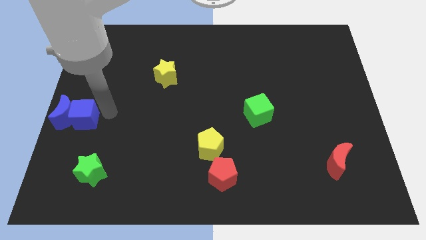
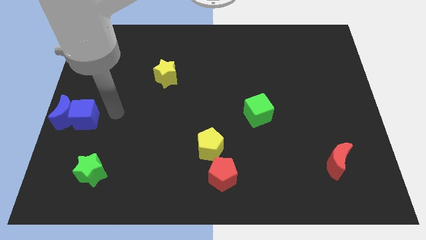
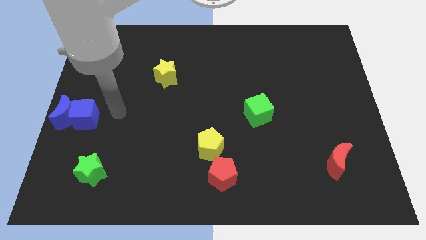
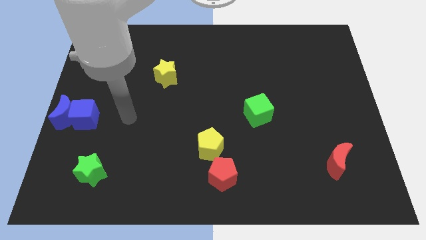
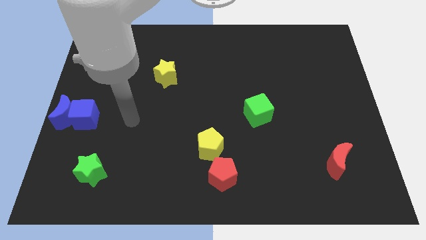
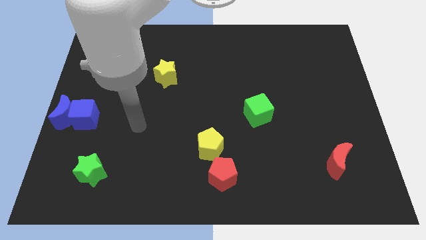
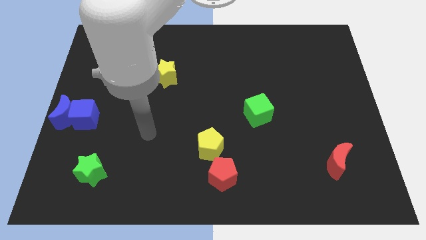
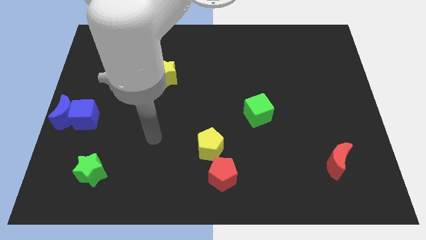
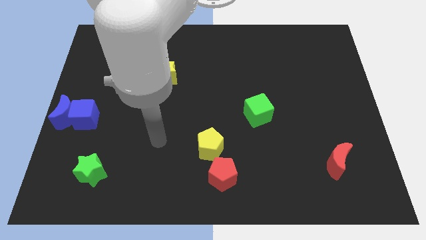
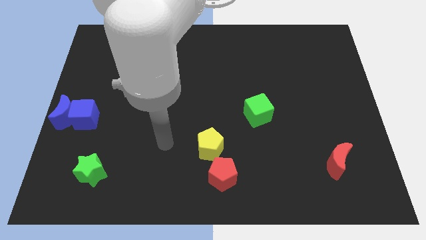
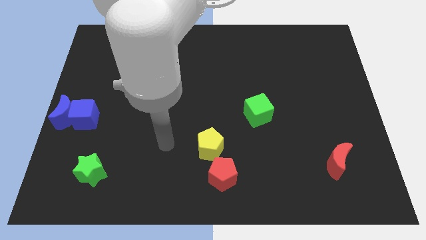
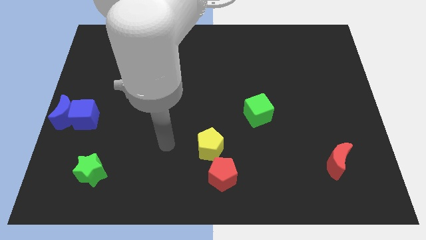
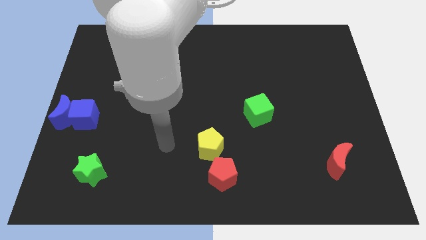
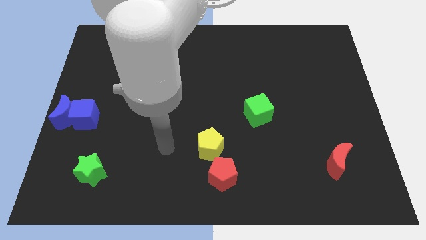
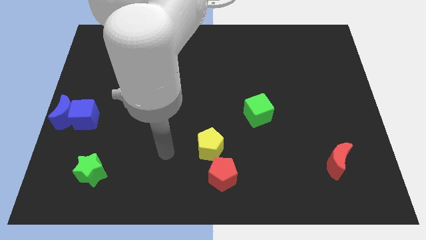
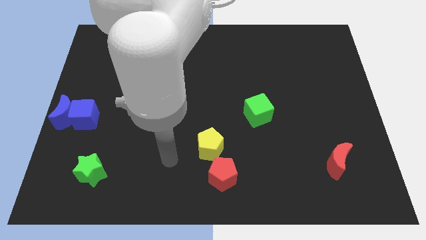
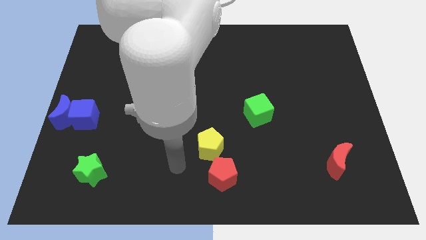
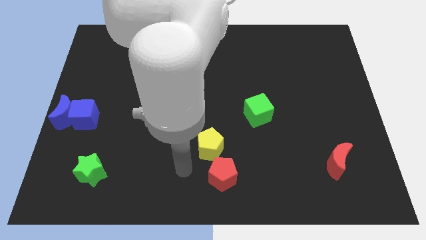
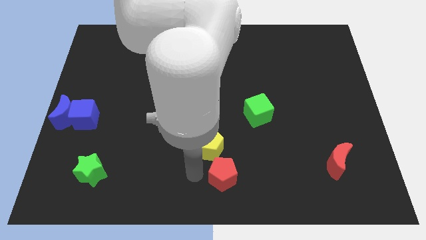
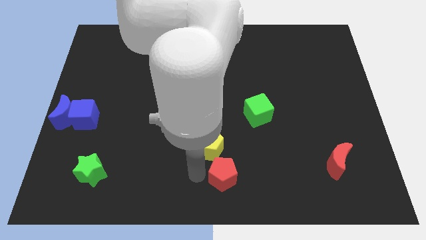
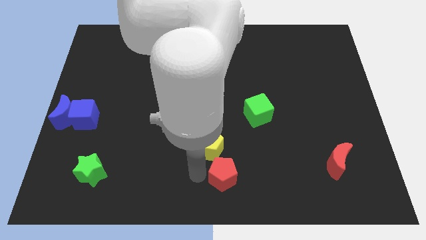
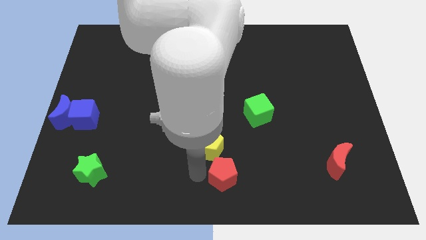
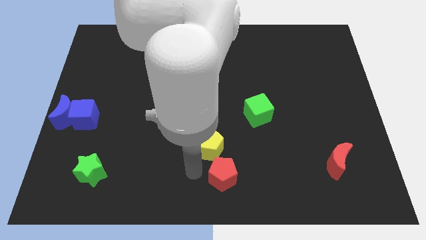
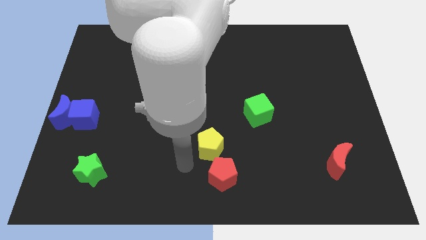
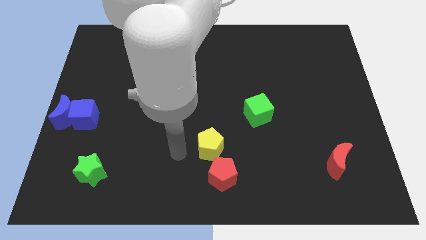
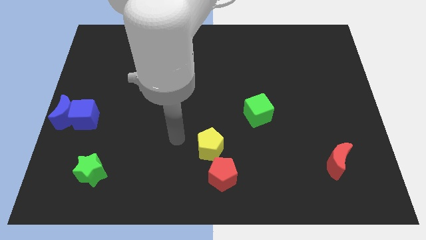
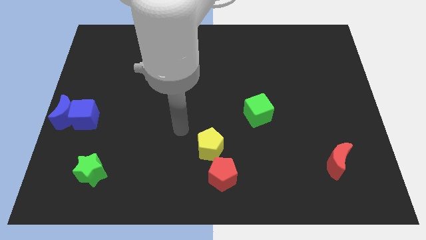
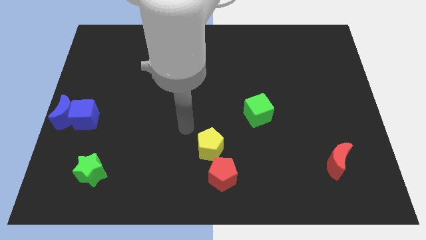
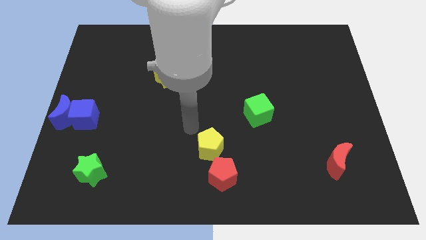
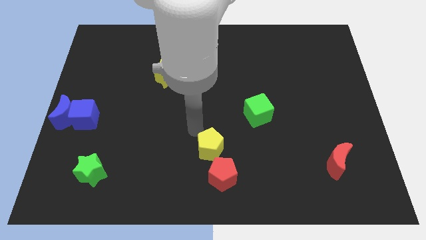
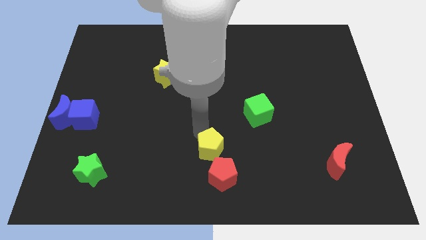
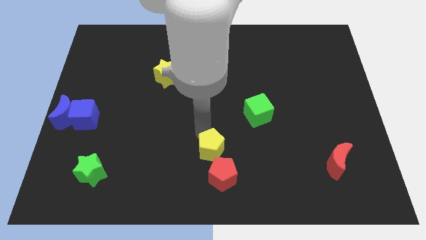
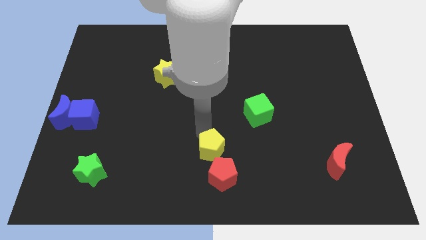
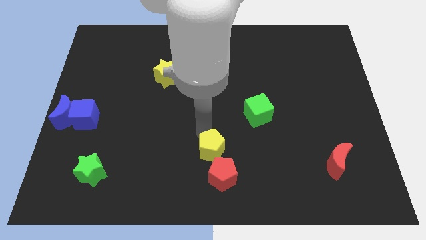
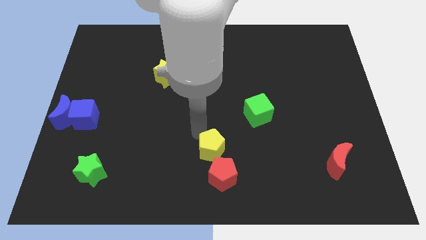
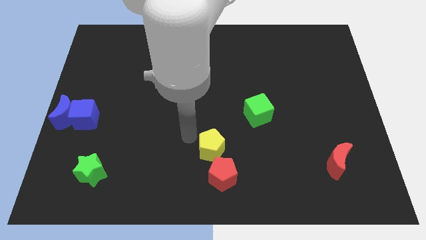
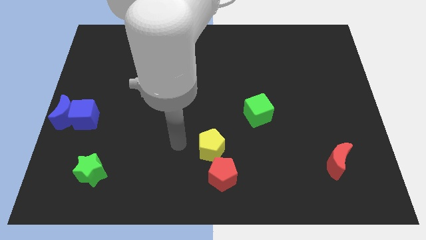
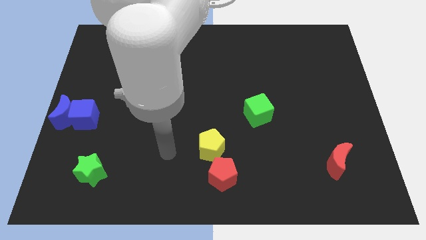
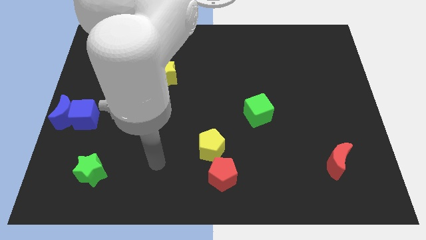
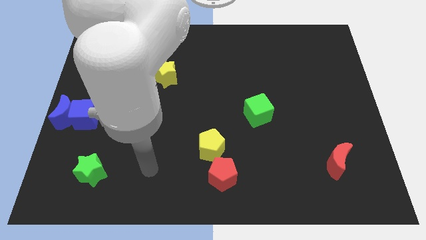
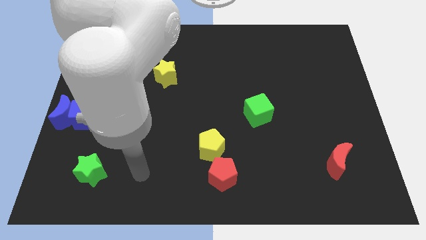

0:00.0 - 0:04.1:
push the yellow pentagon slightly towards the red pentagon

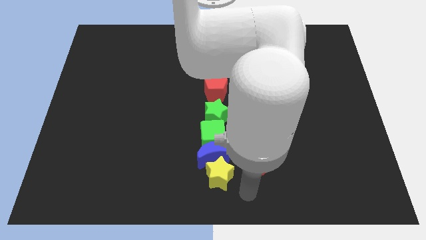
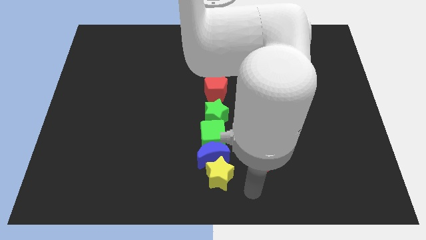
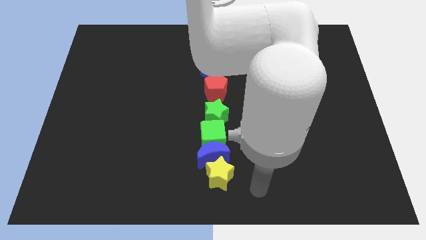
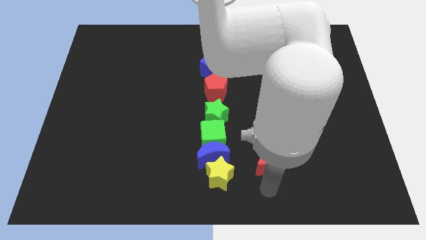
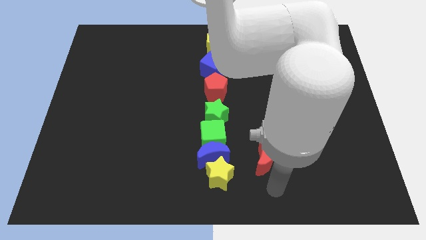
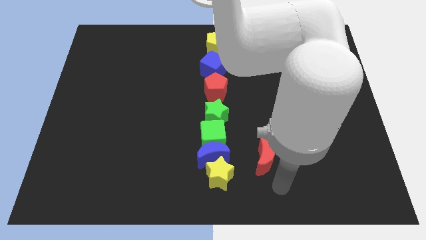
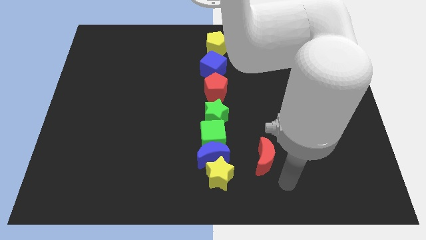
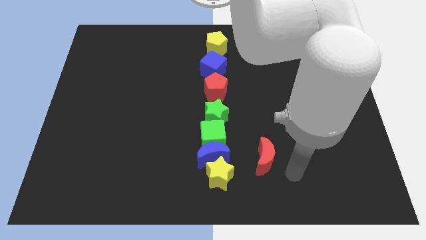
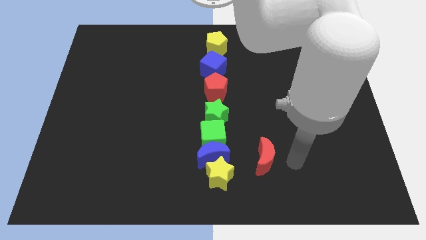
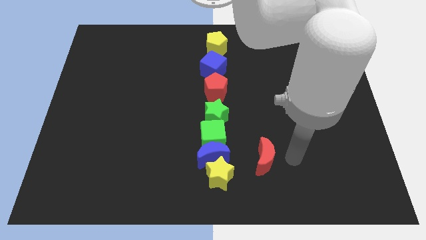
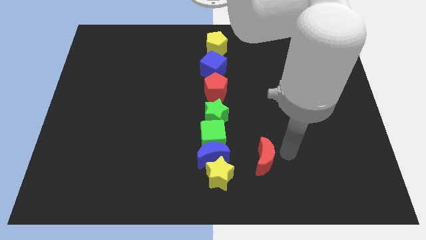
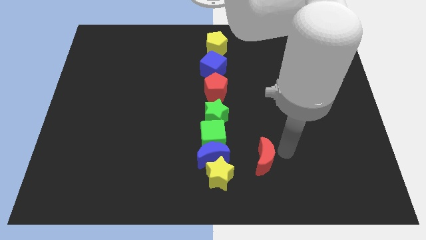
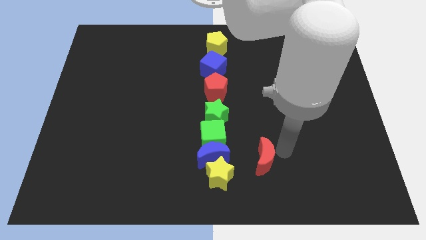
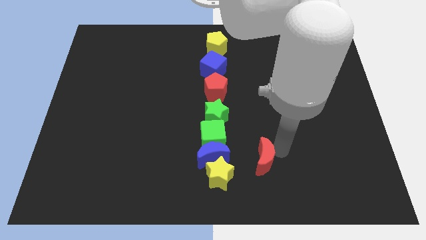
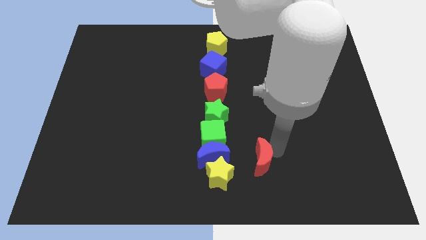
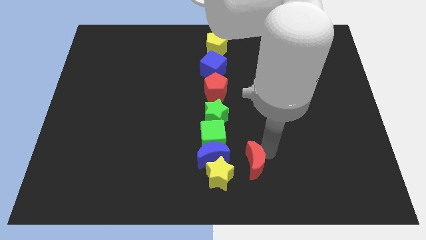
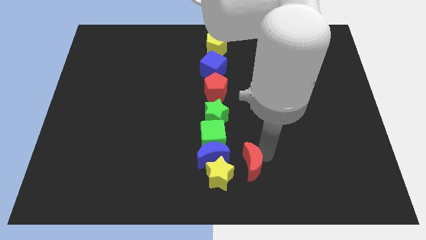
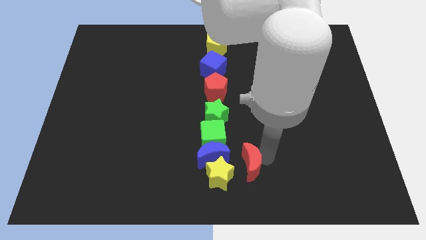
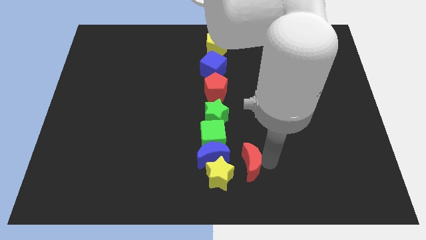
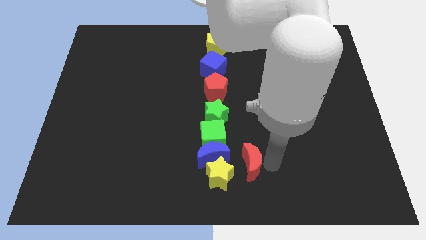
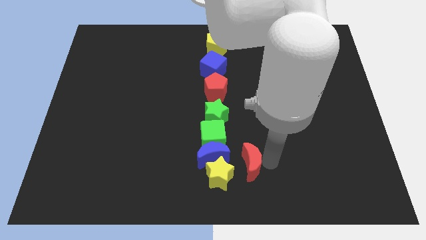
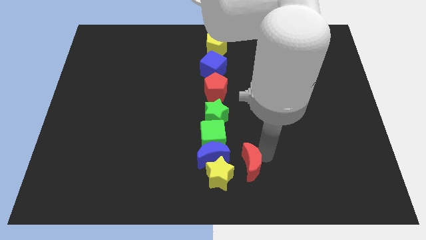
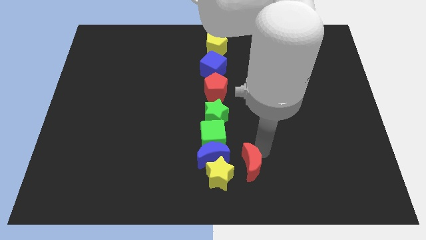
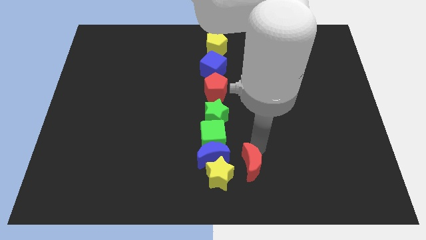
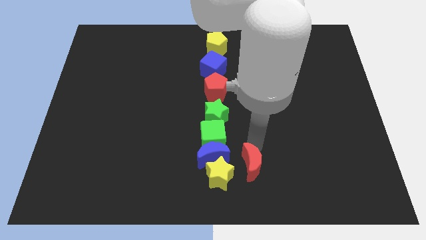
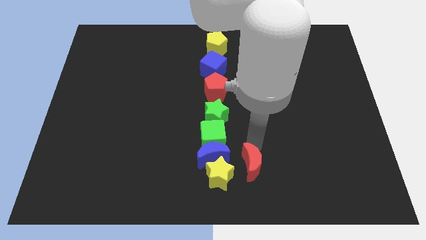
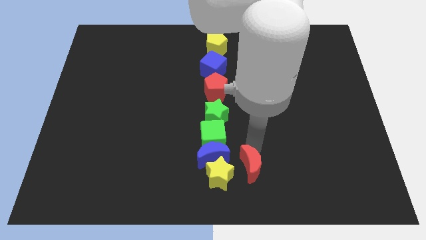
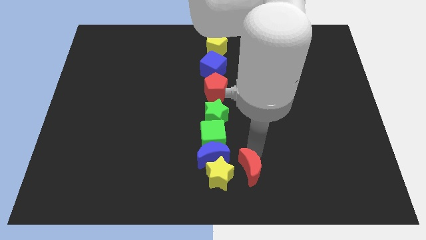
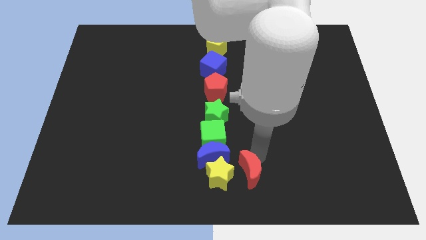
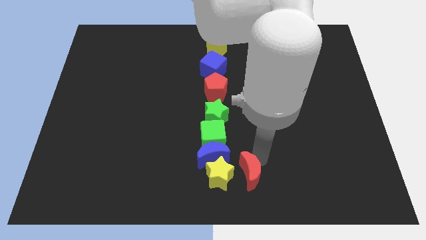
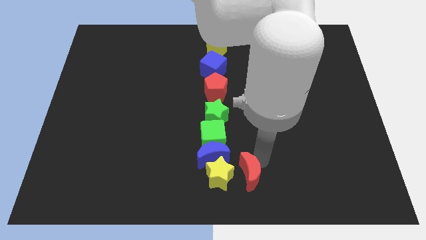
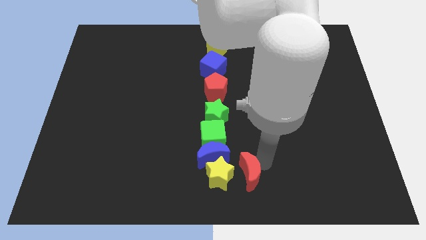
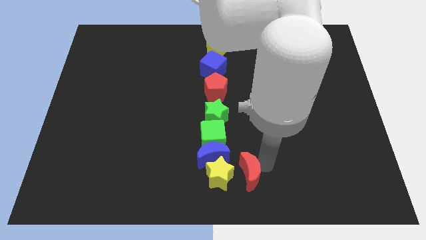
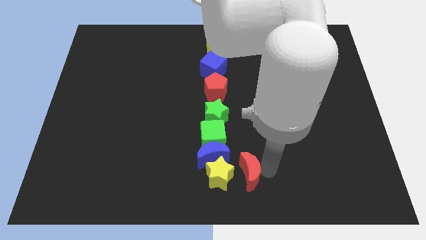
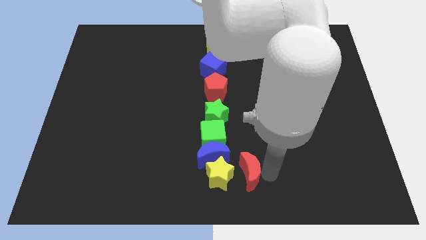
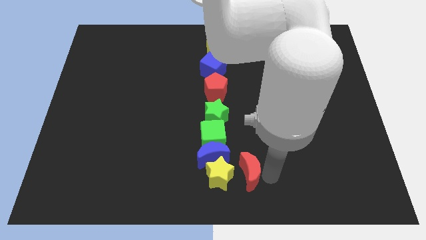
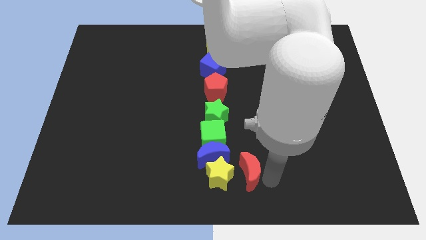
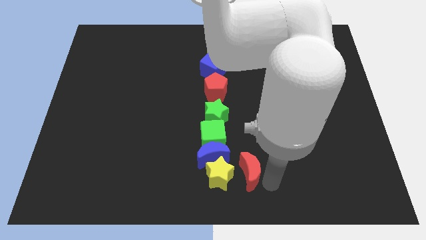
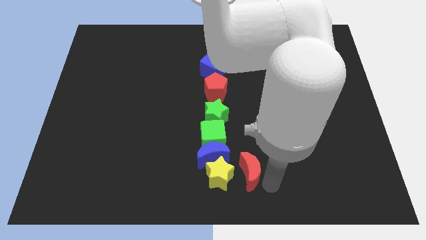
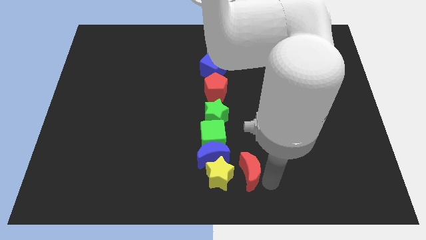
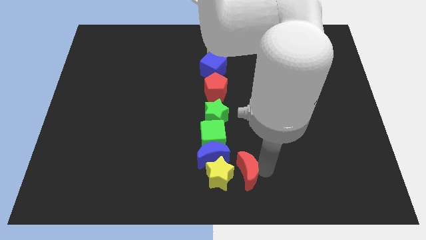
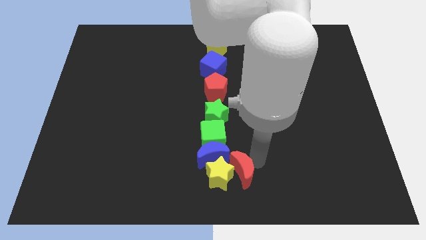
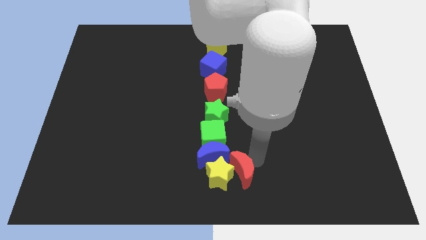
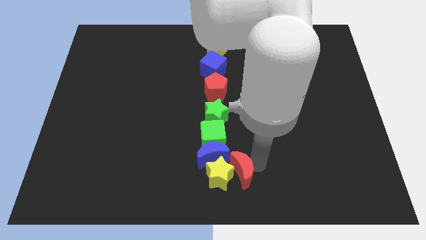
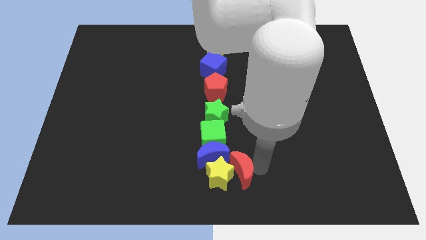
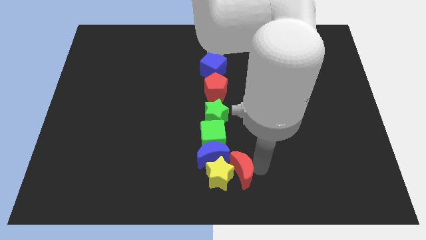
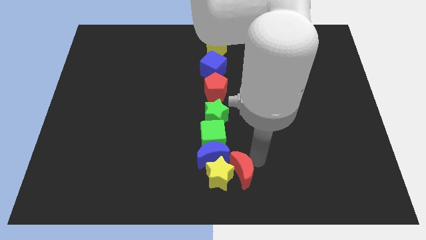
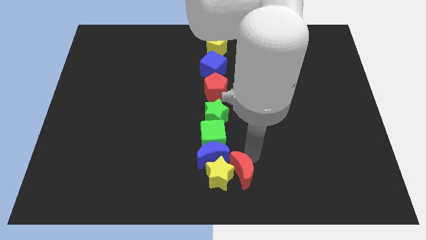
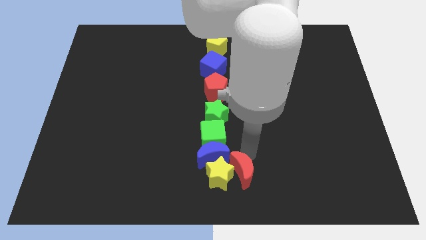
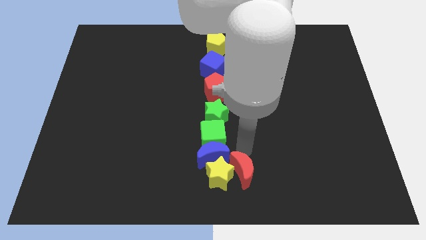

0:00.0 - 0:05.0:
push the red crescent to the right of the yellow star
